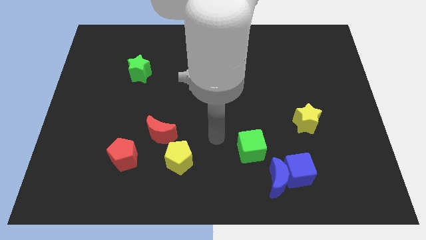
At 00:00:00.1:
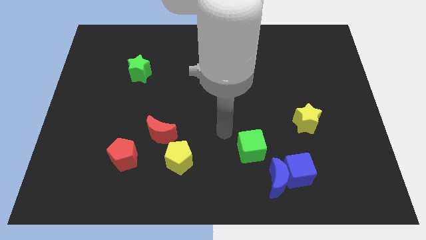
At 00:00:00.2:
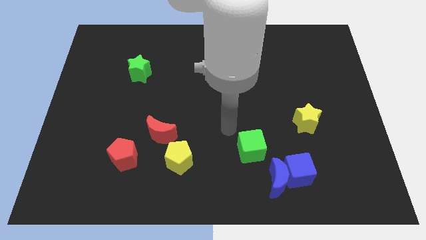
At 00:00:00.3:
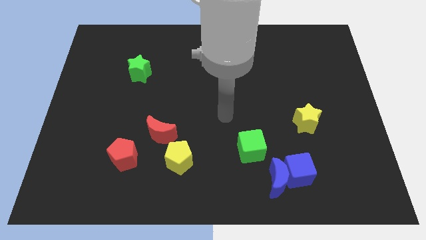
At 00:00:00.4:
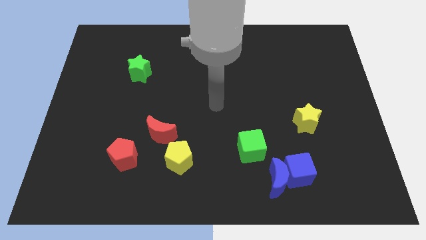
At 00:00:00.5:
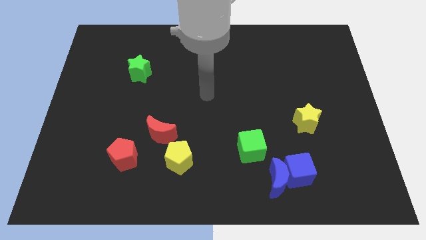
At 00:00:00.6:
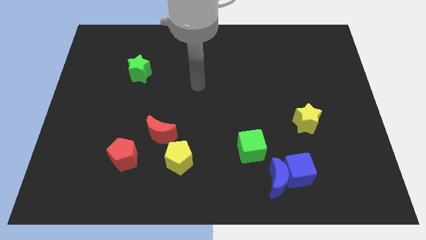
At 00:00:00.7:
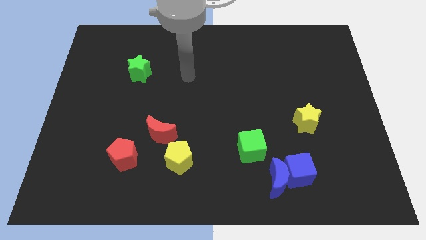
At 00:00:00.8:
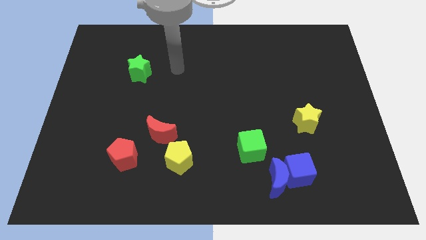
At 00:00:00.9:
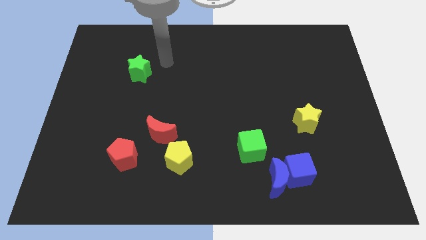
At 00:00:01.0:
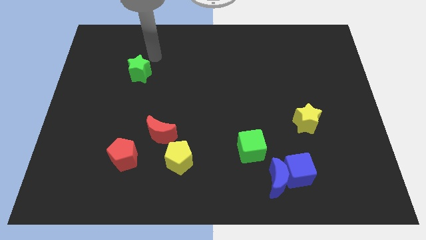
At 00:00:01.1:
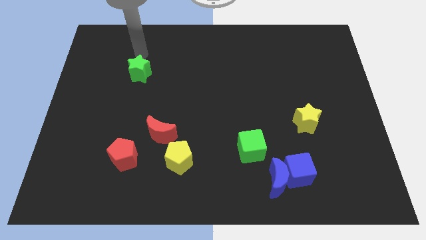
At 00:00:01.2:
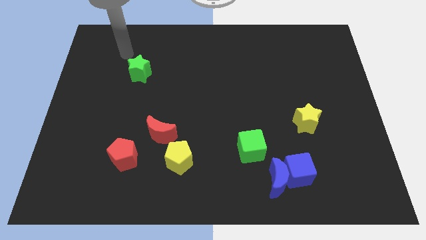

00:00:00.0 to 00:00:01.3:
point your arm at the top of the green star

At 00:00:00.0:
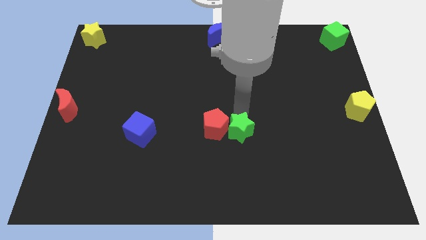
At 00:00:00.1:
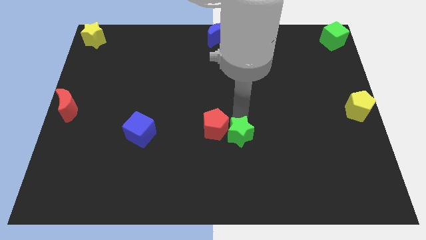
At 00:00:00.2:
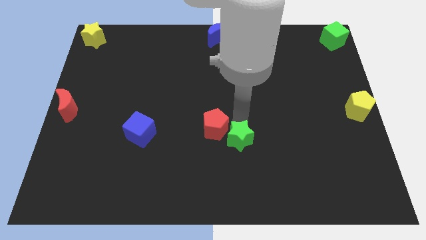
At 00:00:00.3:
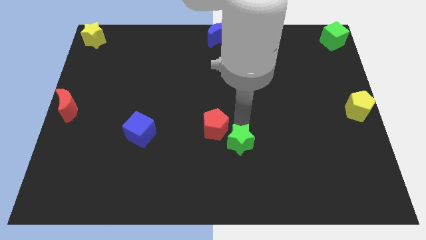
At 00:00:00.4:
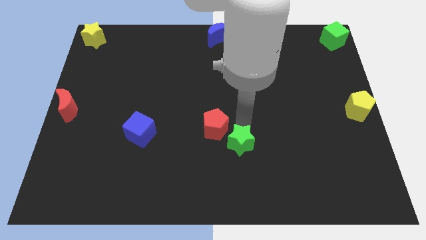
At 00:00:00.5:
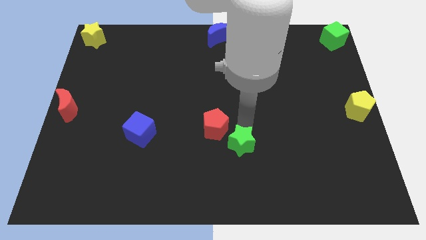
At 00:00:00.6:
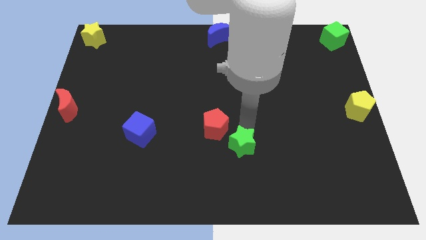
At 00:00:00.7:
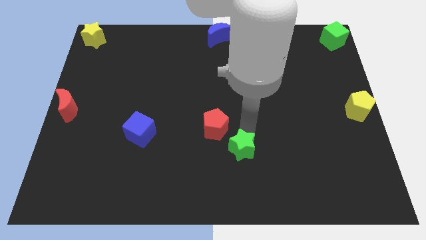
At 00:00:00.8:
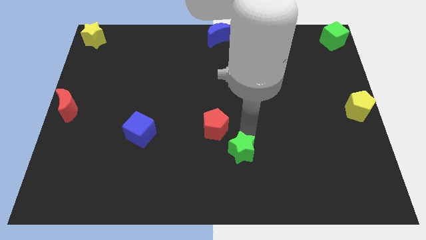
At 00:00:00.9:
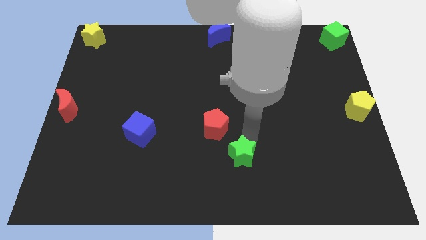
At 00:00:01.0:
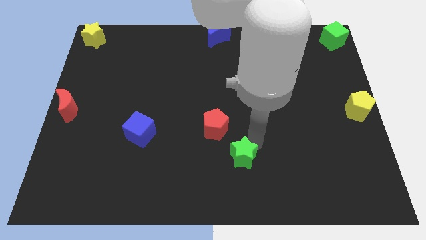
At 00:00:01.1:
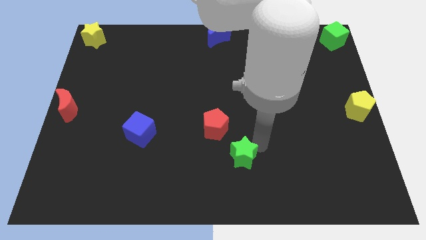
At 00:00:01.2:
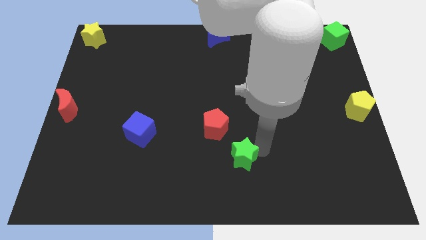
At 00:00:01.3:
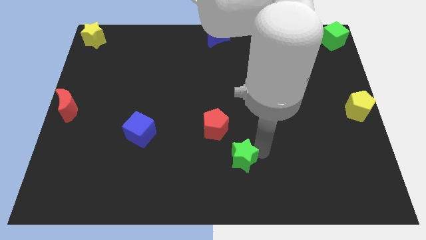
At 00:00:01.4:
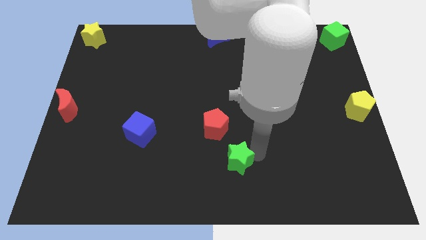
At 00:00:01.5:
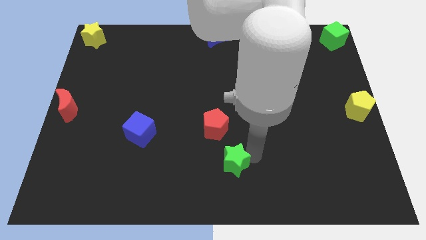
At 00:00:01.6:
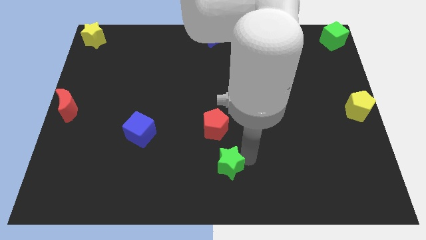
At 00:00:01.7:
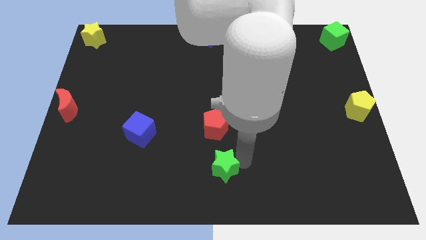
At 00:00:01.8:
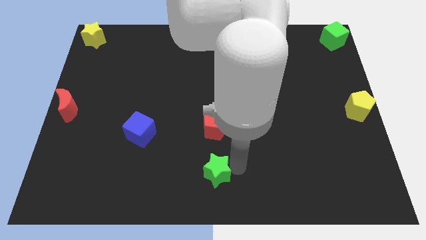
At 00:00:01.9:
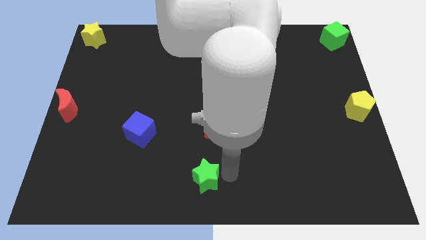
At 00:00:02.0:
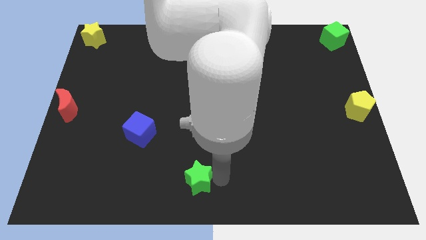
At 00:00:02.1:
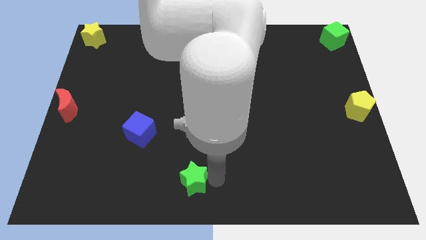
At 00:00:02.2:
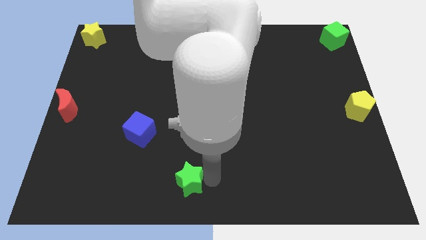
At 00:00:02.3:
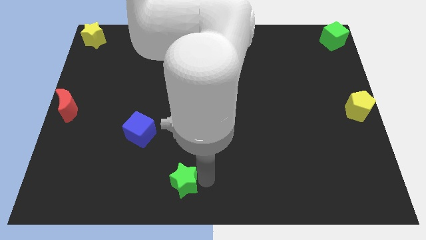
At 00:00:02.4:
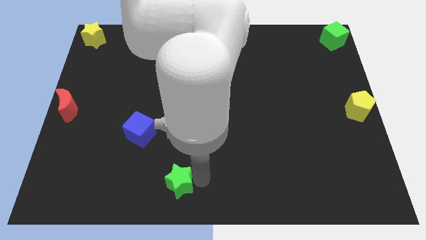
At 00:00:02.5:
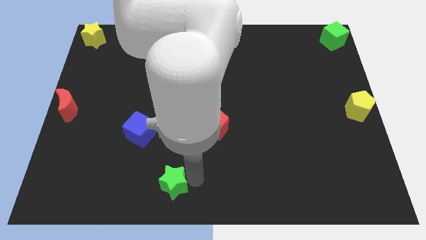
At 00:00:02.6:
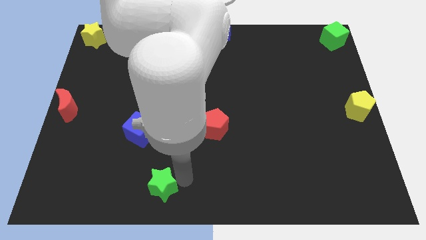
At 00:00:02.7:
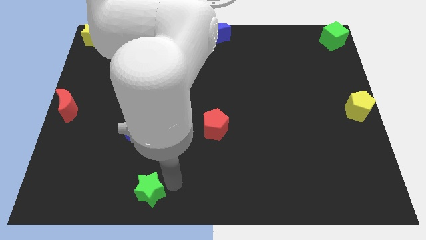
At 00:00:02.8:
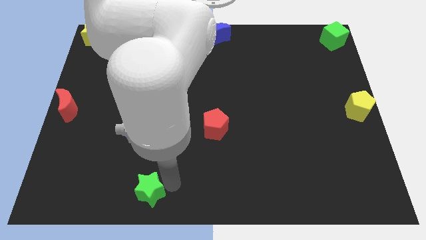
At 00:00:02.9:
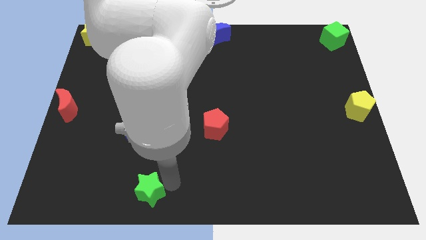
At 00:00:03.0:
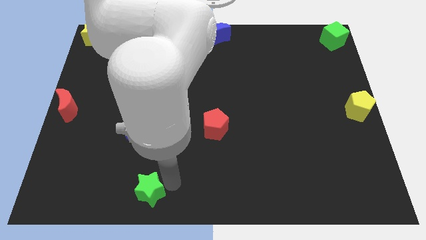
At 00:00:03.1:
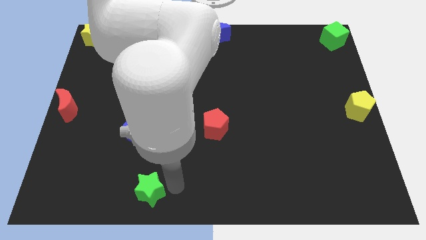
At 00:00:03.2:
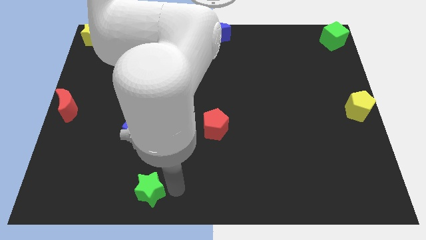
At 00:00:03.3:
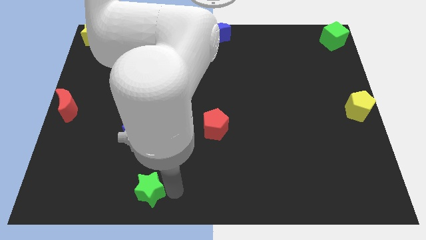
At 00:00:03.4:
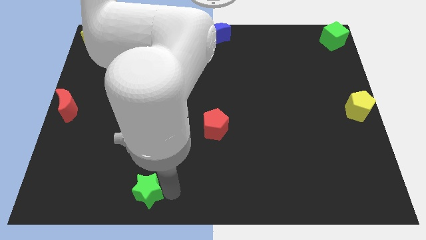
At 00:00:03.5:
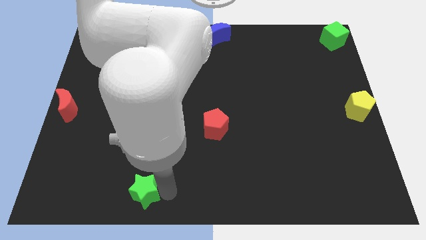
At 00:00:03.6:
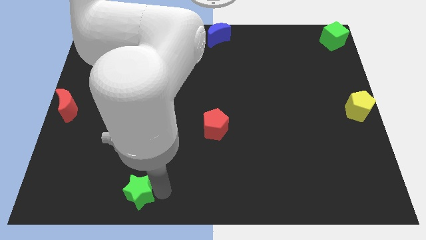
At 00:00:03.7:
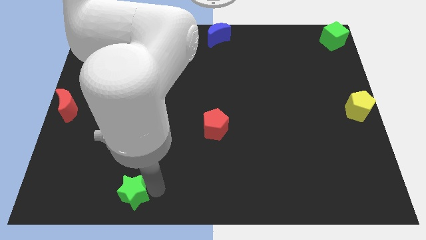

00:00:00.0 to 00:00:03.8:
slide the green star to the bottom side of the blue cube

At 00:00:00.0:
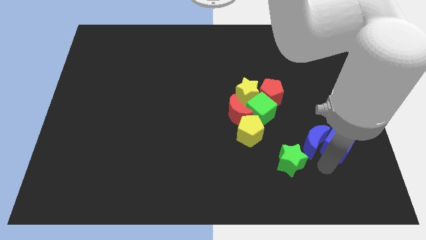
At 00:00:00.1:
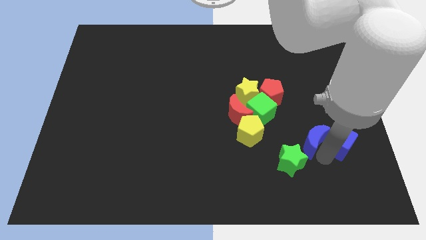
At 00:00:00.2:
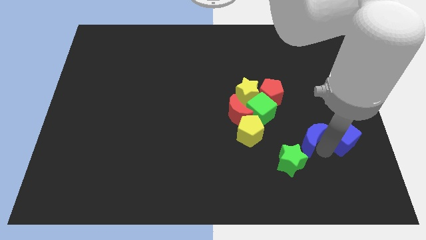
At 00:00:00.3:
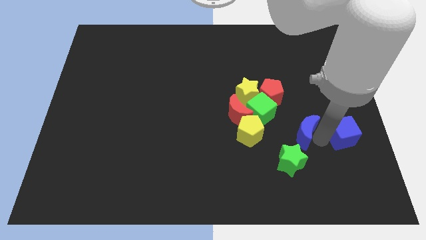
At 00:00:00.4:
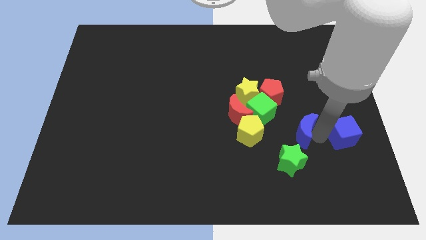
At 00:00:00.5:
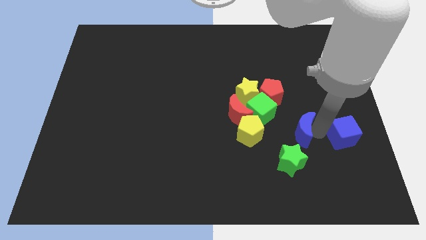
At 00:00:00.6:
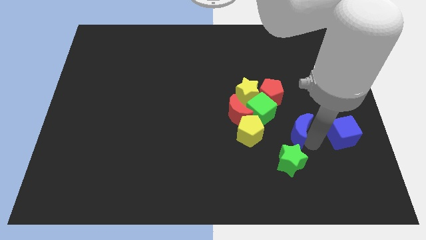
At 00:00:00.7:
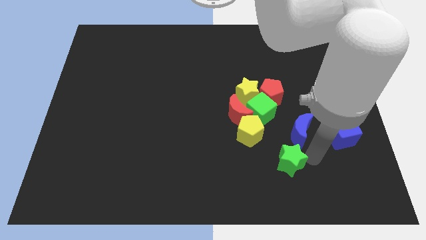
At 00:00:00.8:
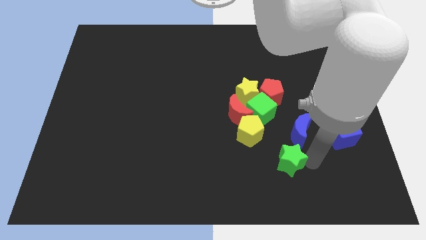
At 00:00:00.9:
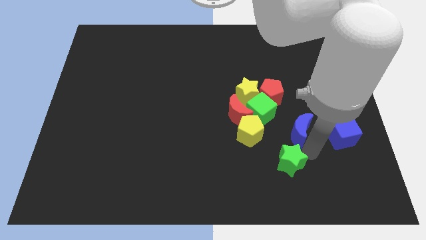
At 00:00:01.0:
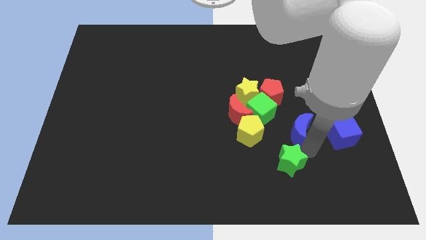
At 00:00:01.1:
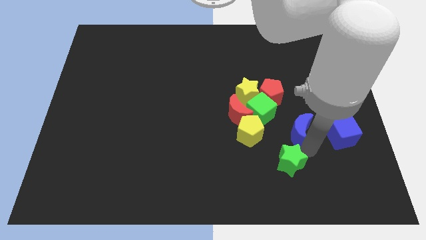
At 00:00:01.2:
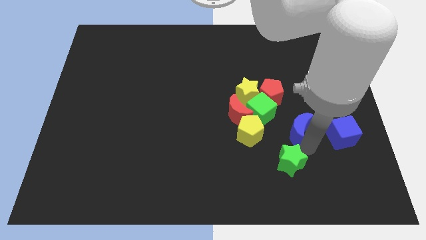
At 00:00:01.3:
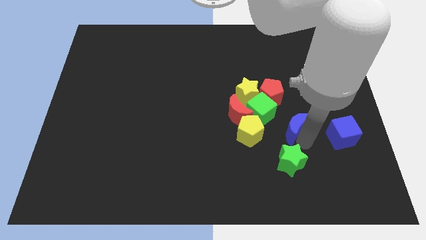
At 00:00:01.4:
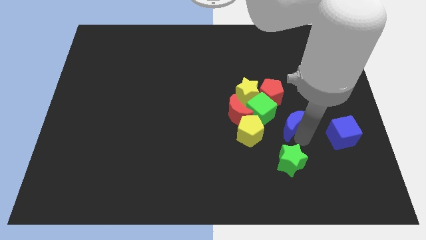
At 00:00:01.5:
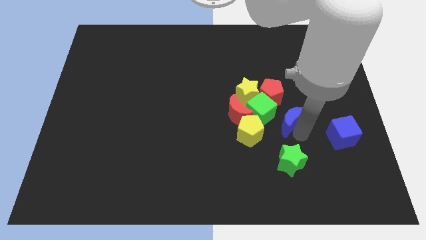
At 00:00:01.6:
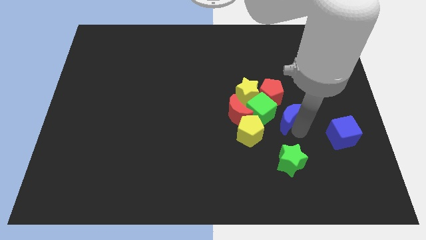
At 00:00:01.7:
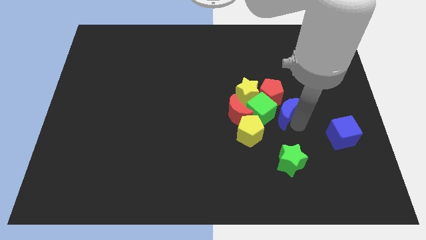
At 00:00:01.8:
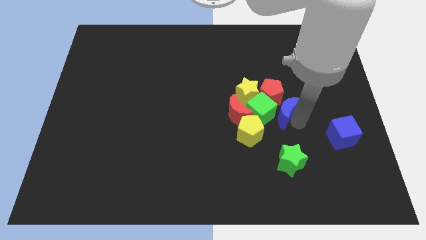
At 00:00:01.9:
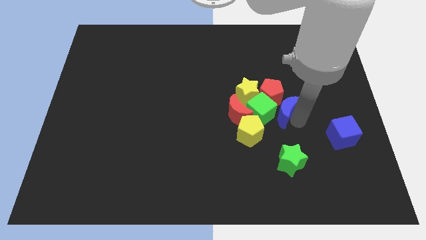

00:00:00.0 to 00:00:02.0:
place blue moon to the top of green star

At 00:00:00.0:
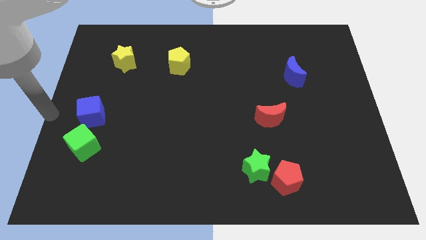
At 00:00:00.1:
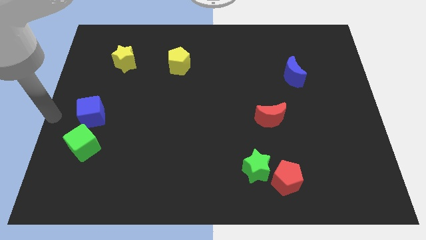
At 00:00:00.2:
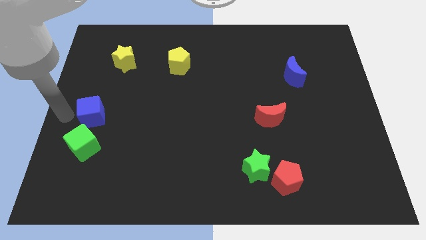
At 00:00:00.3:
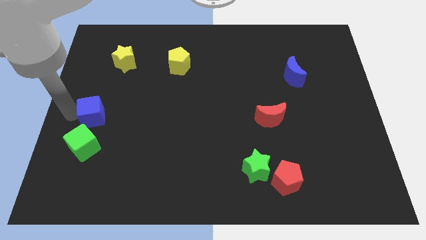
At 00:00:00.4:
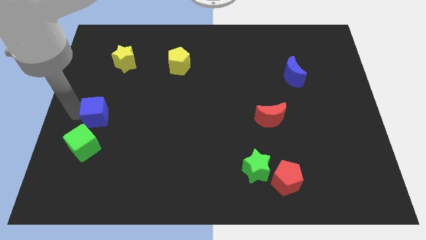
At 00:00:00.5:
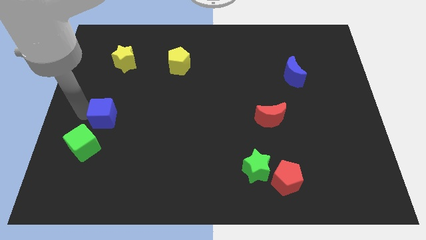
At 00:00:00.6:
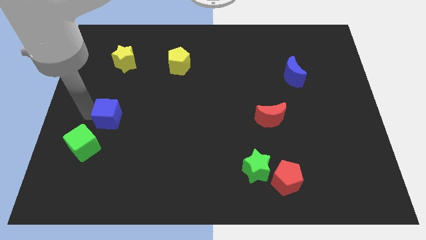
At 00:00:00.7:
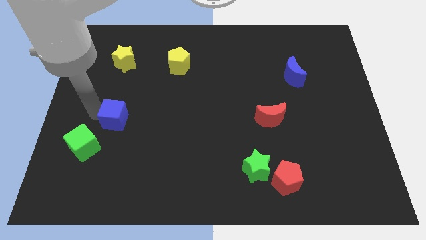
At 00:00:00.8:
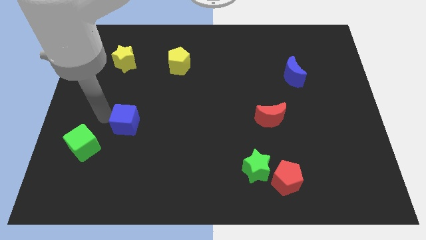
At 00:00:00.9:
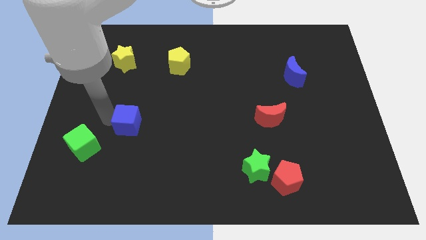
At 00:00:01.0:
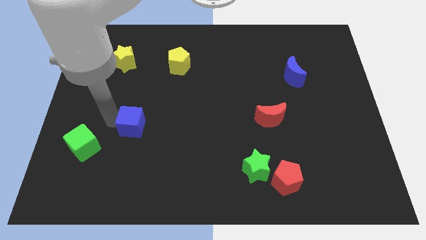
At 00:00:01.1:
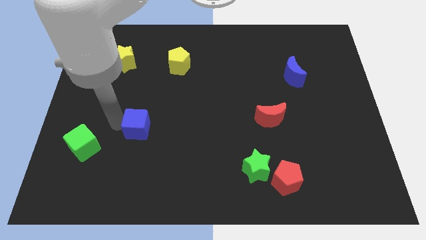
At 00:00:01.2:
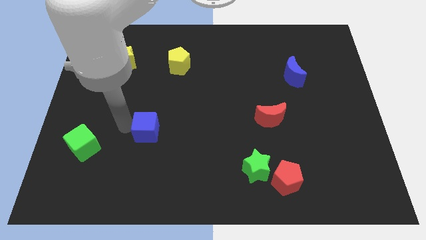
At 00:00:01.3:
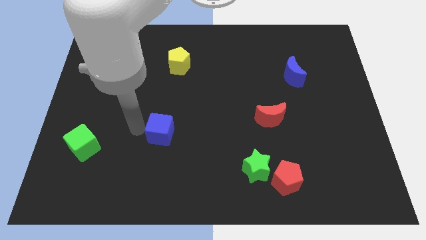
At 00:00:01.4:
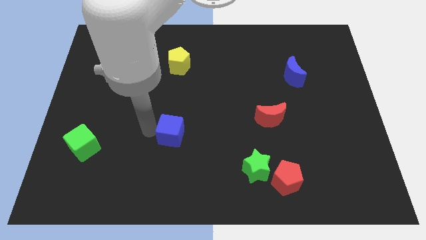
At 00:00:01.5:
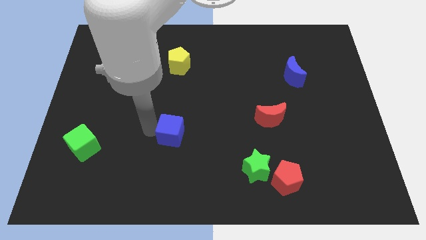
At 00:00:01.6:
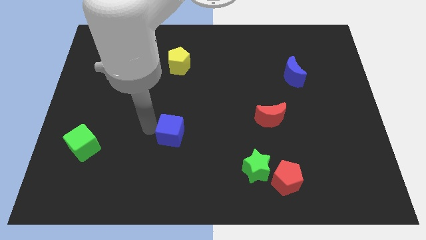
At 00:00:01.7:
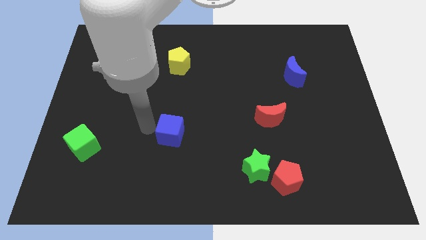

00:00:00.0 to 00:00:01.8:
place the blue cube below the yellow pentagon
